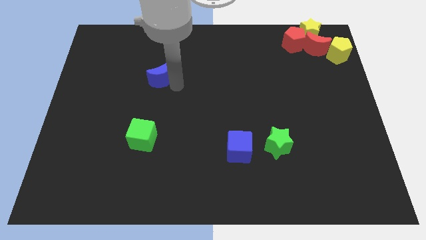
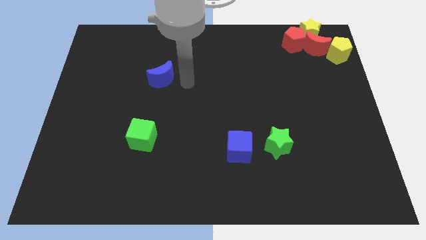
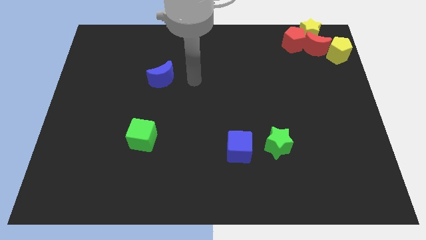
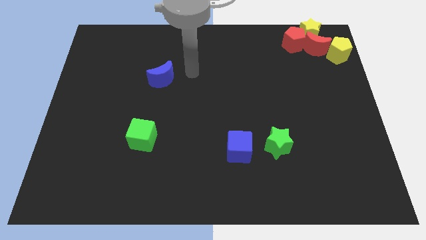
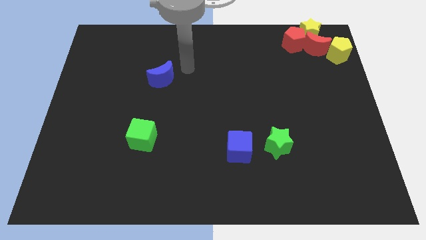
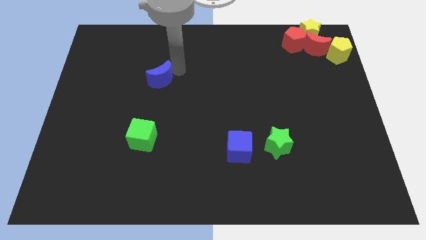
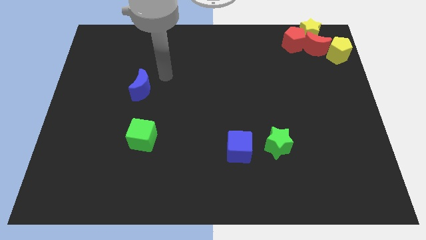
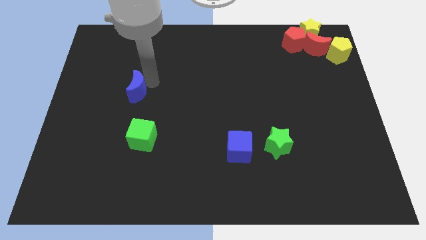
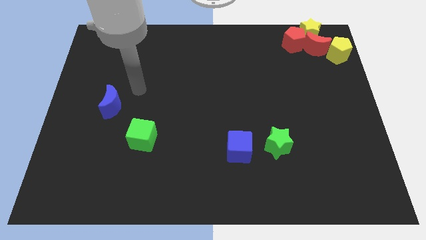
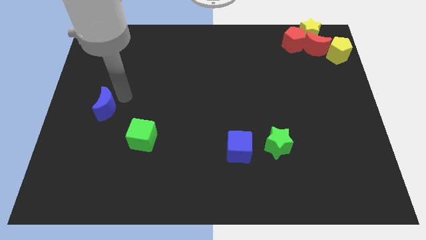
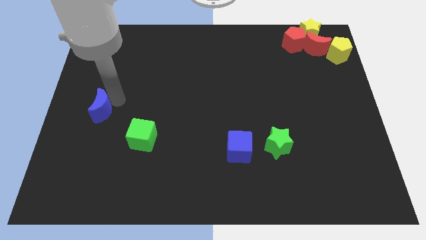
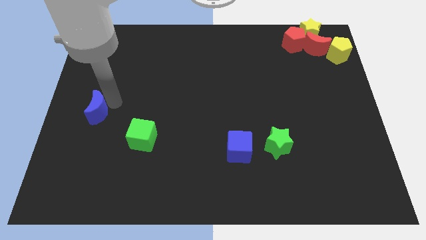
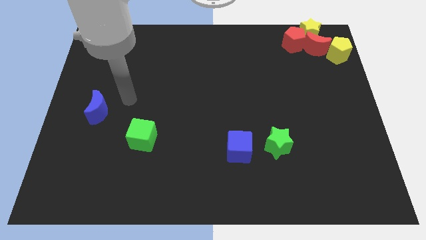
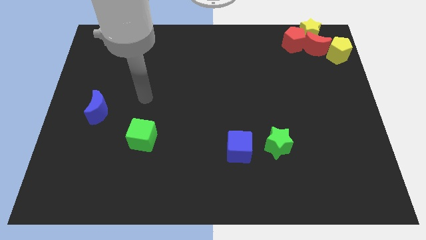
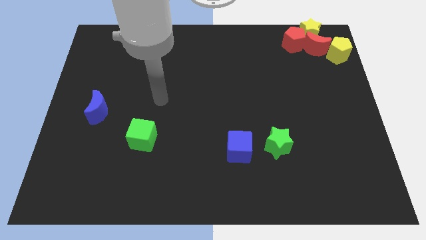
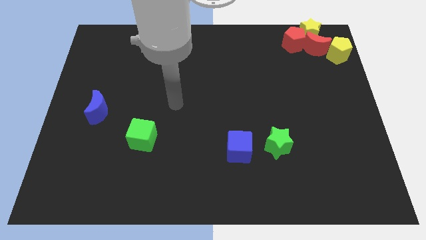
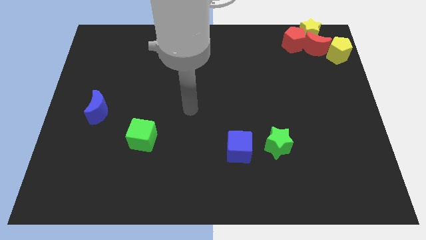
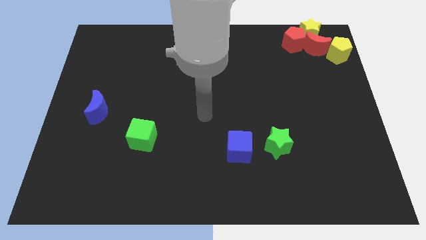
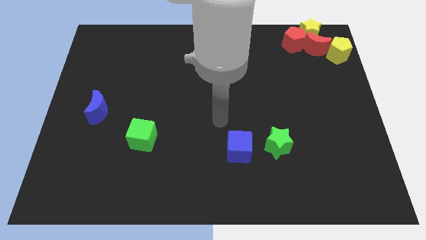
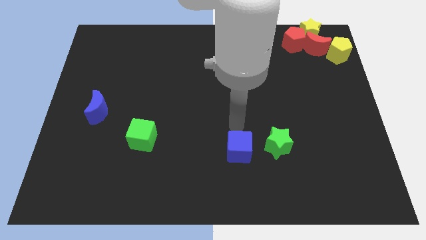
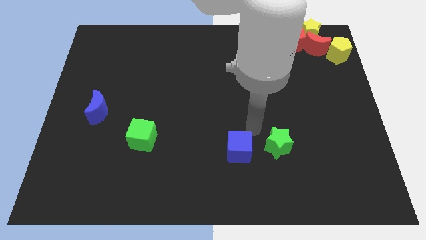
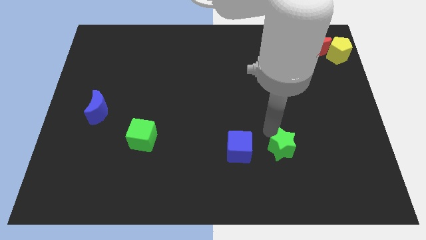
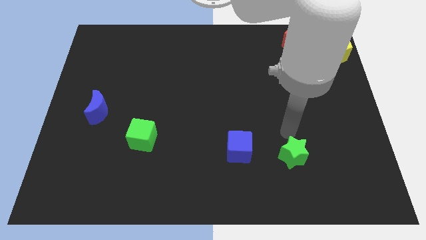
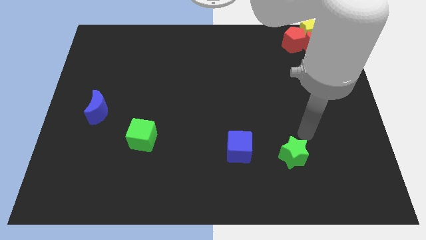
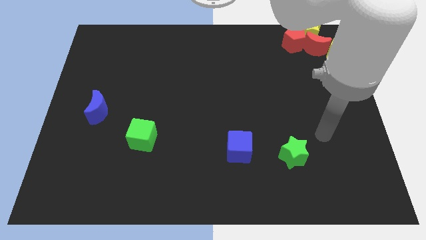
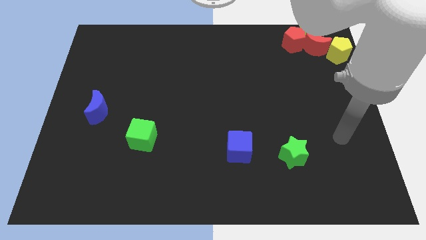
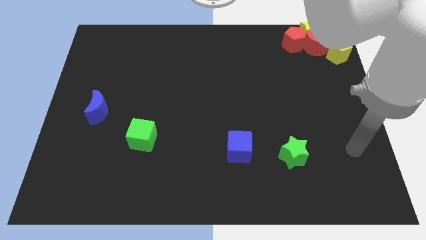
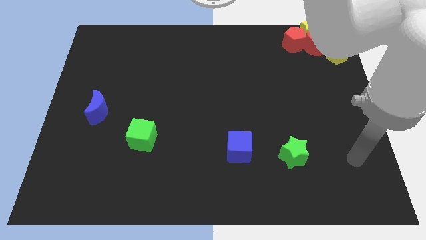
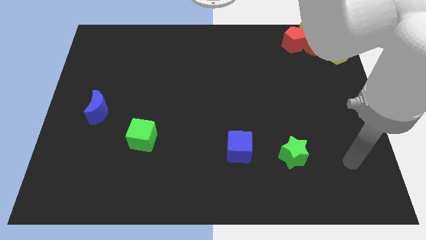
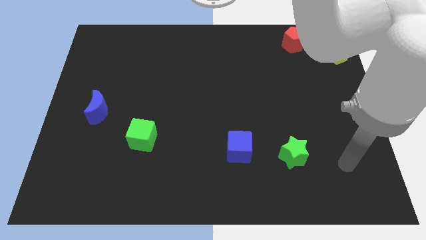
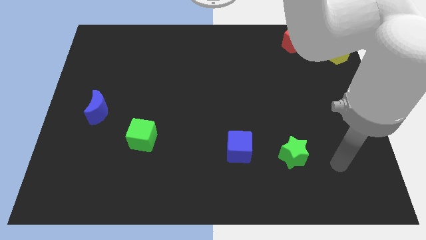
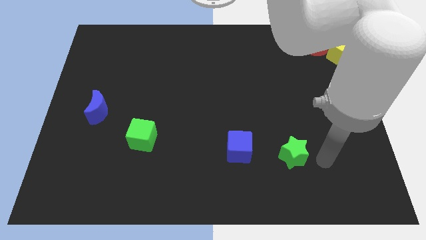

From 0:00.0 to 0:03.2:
place the blue moon diagonally left to the green cube

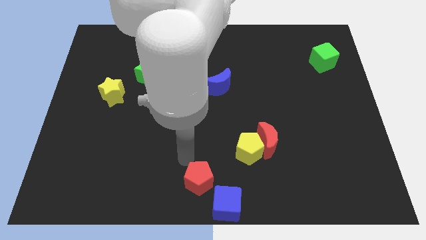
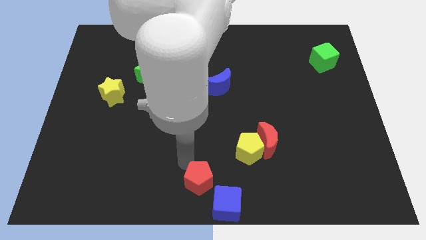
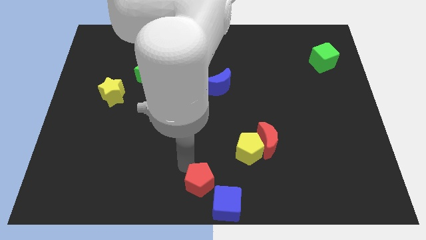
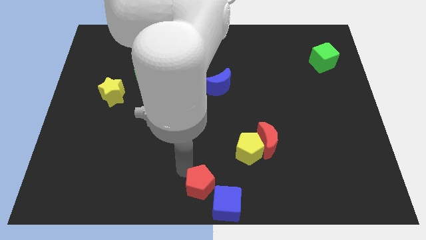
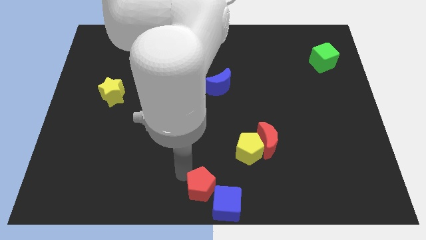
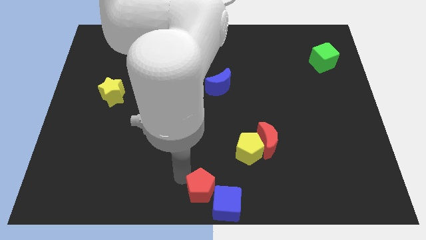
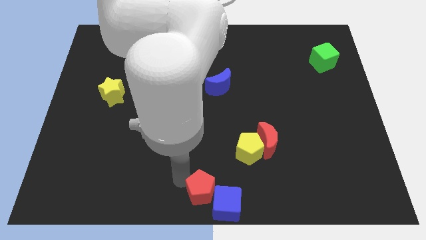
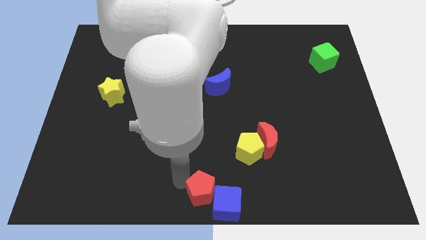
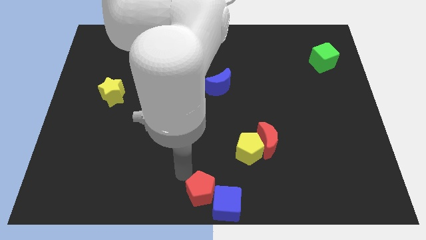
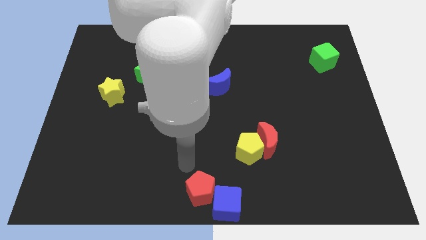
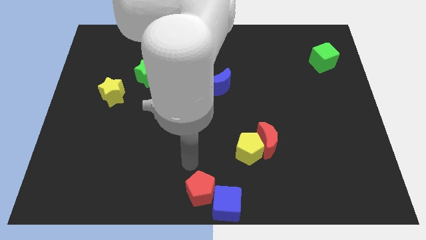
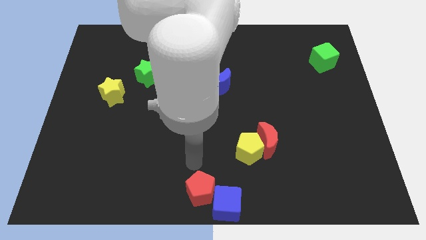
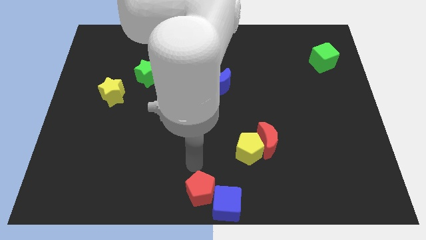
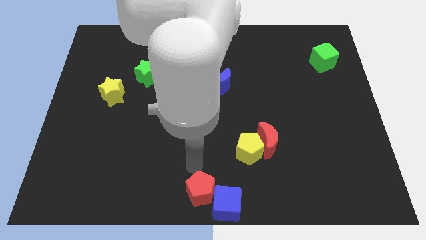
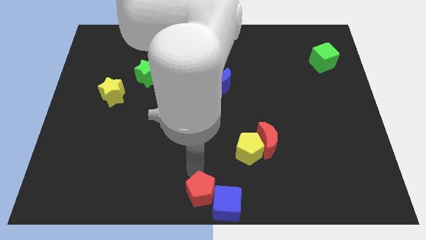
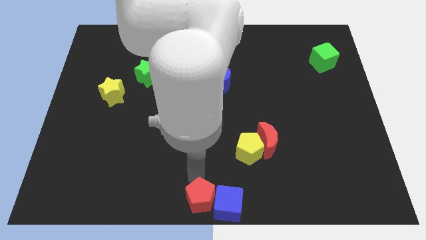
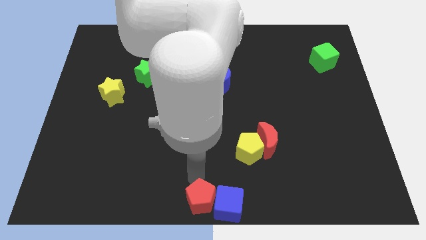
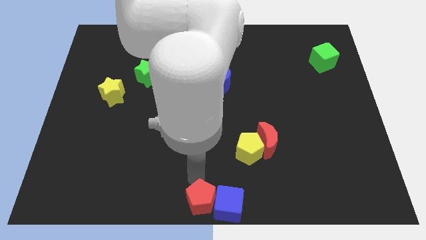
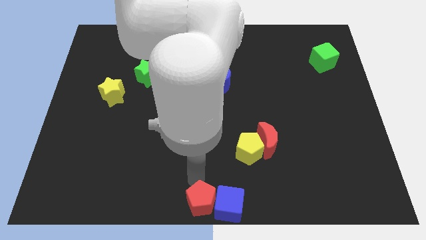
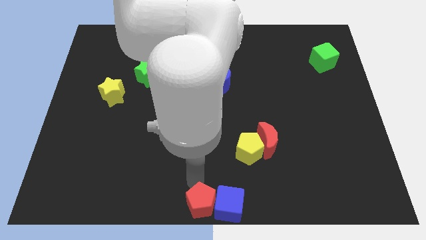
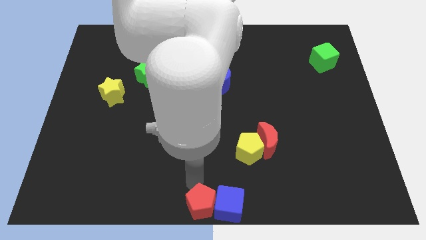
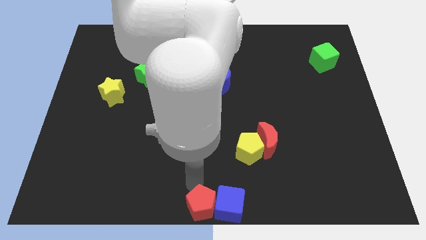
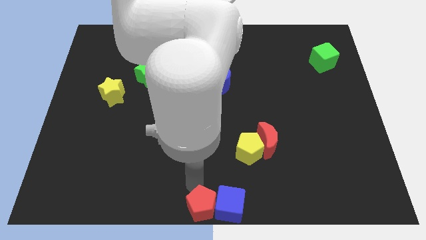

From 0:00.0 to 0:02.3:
place the red pentagon left to the blue cube

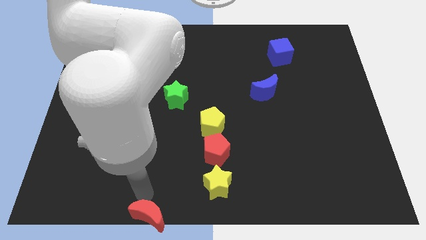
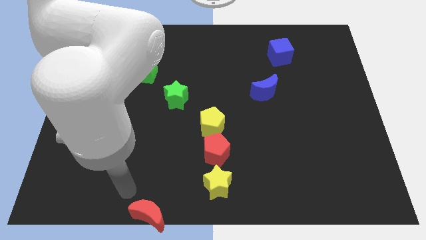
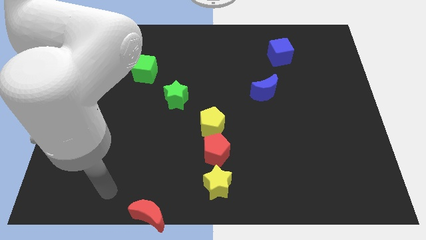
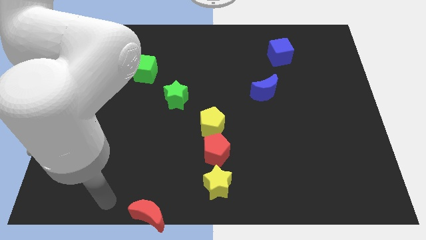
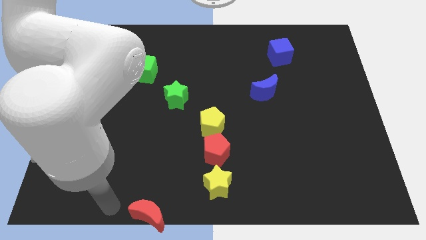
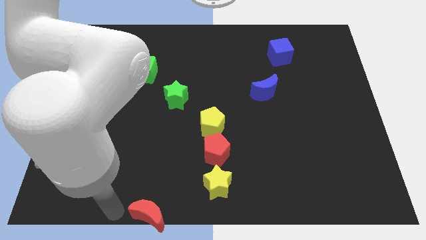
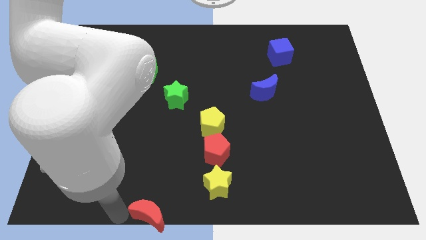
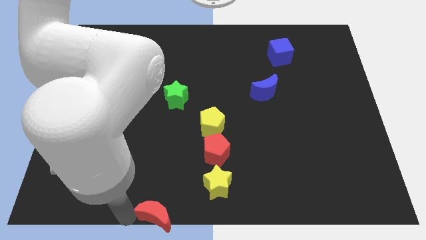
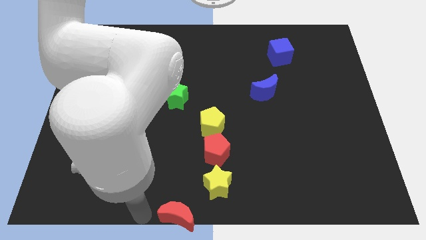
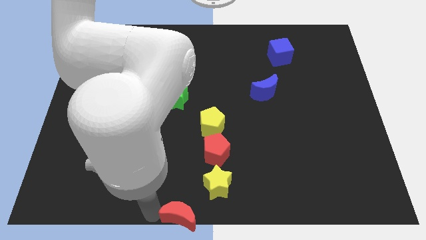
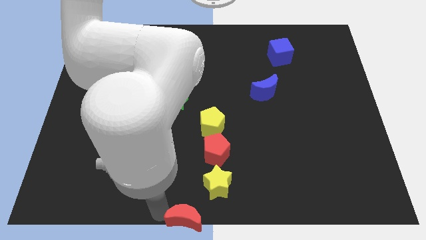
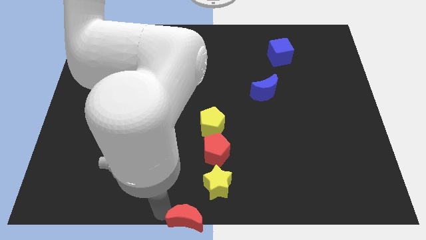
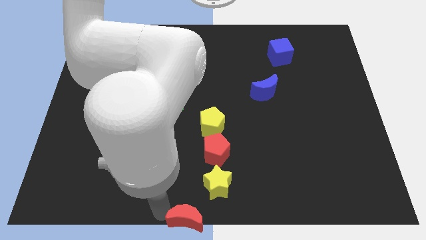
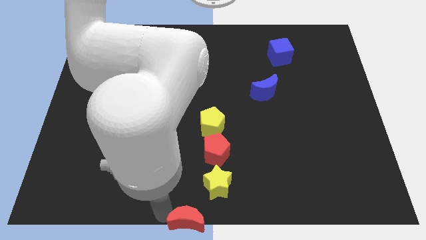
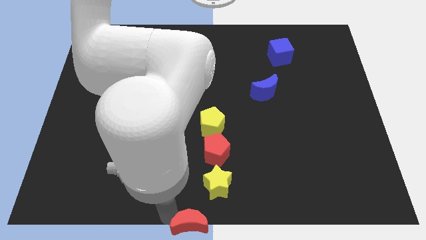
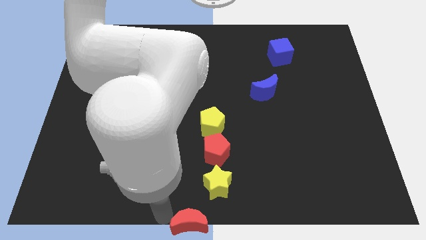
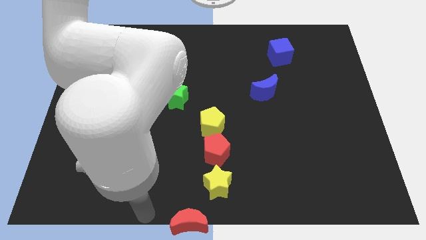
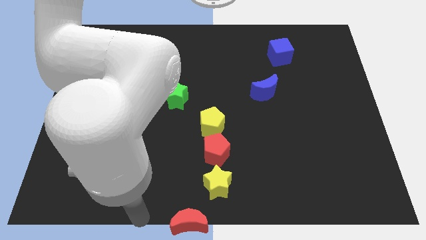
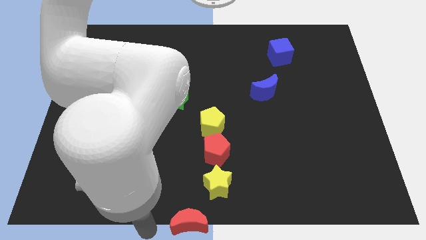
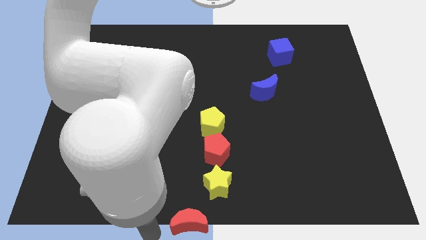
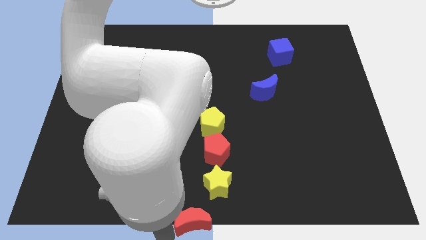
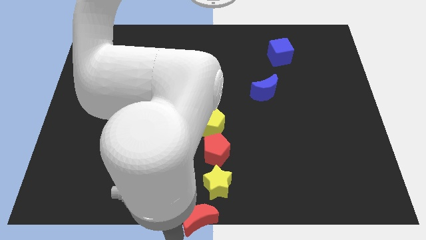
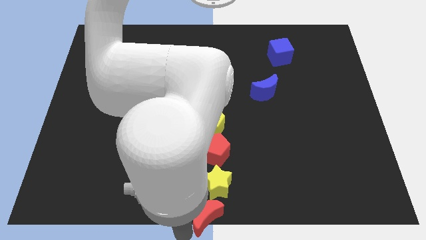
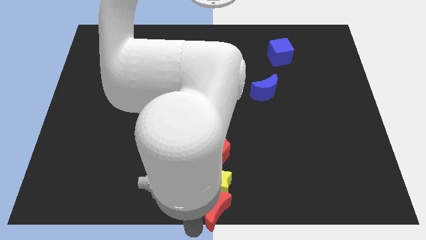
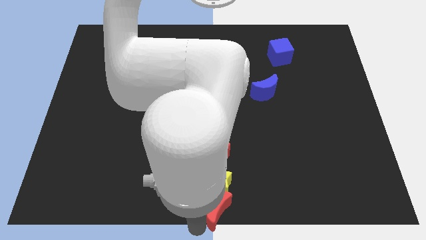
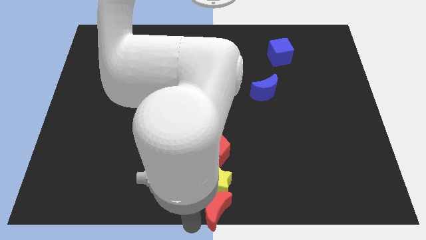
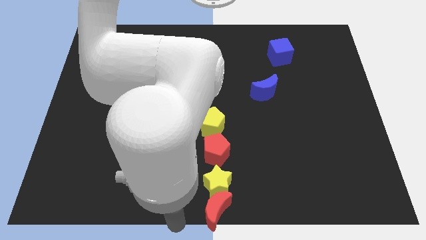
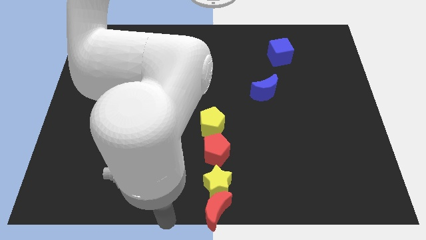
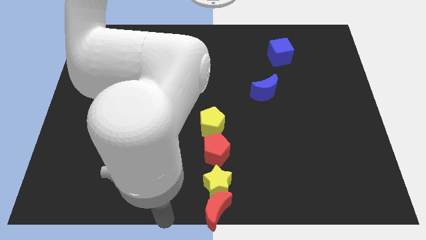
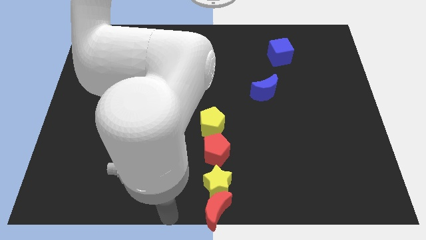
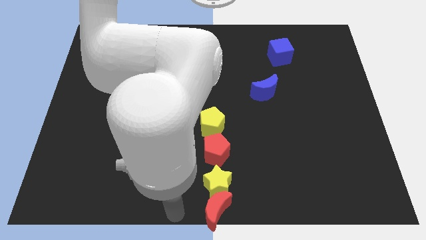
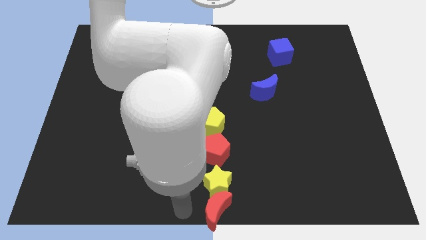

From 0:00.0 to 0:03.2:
place red moon to the bottom of yellow star

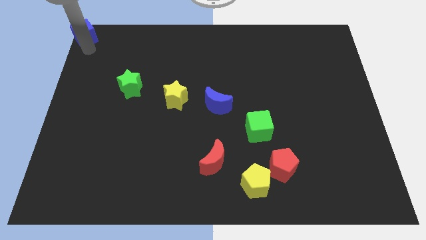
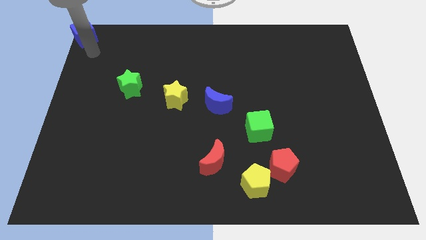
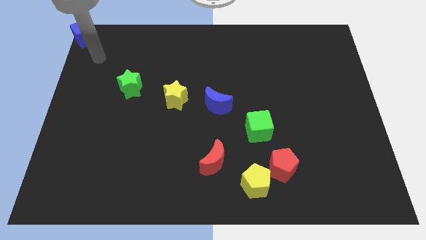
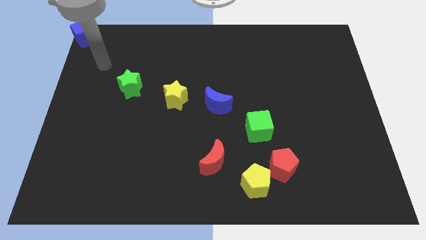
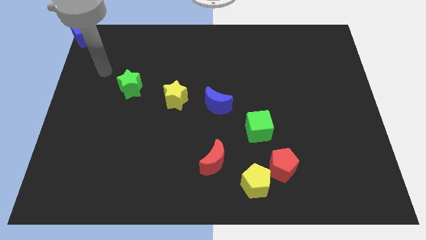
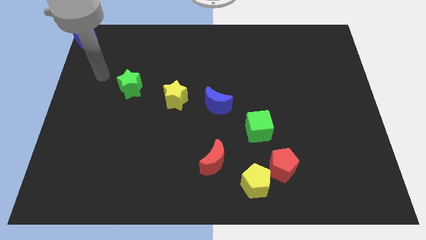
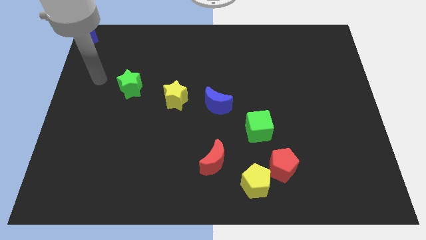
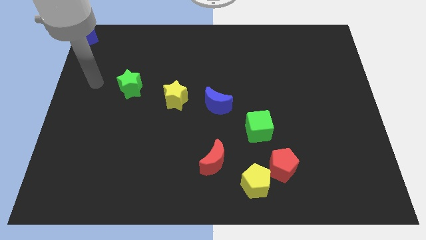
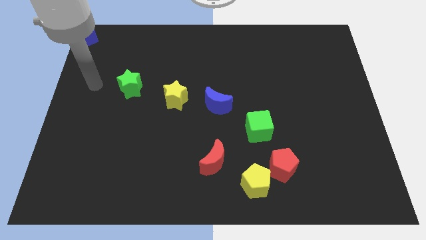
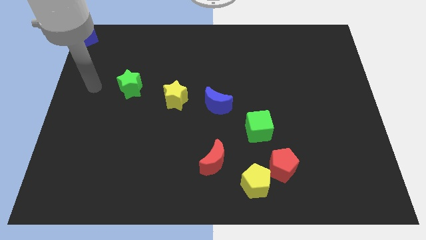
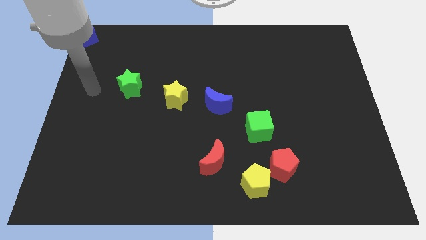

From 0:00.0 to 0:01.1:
push your hand at the left side of the green star
